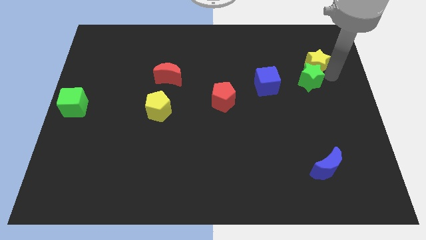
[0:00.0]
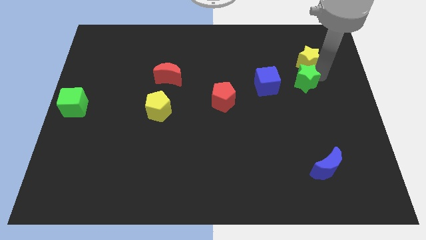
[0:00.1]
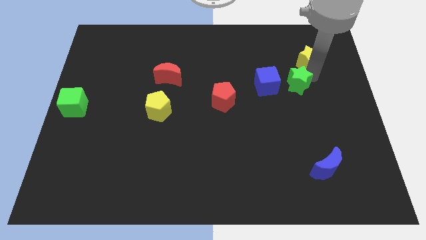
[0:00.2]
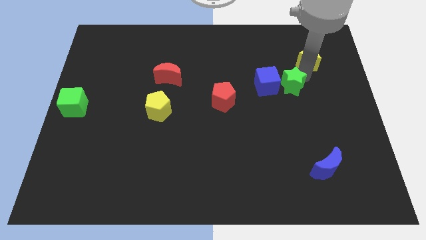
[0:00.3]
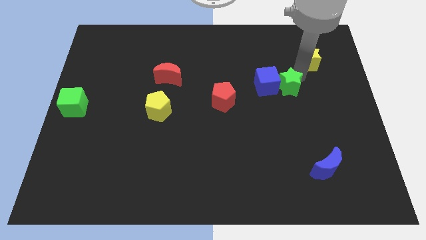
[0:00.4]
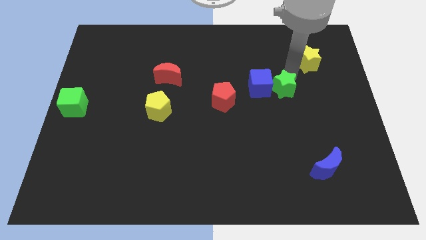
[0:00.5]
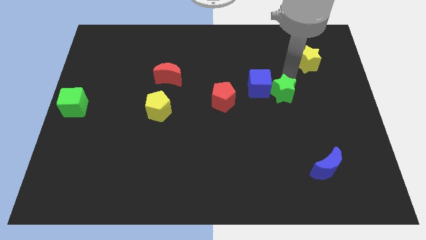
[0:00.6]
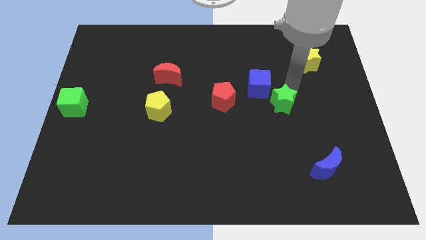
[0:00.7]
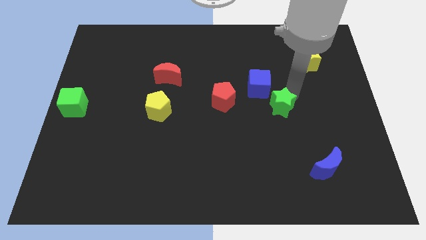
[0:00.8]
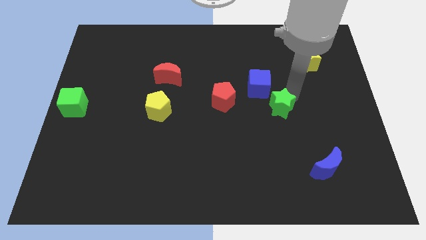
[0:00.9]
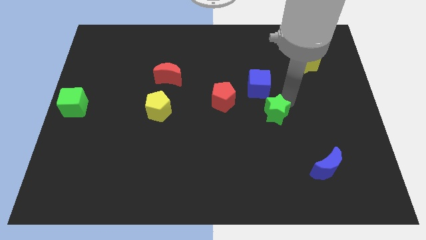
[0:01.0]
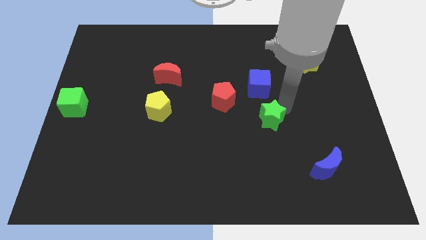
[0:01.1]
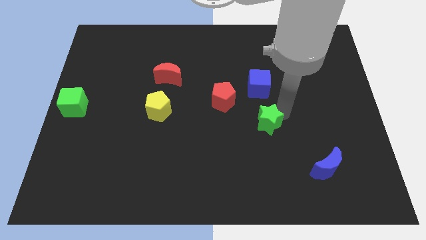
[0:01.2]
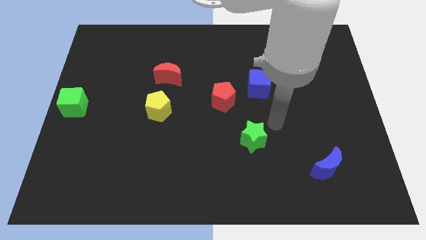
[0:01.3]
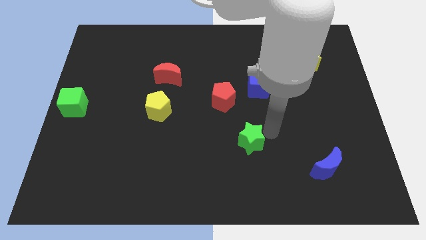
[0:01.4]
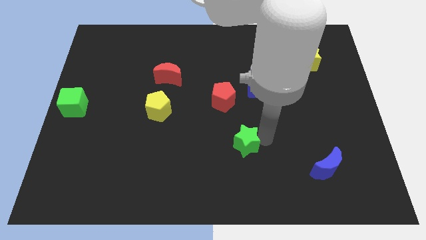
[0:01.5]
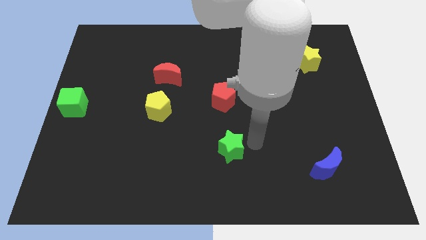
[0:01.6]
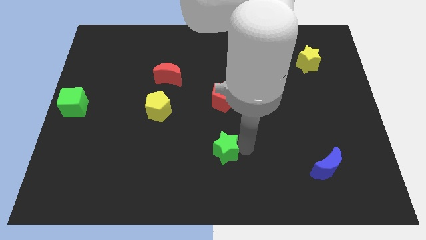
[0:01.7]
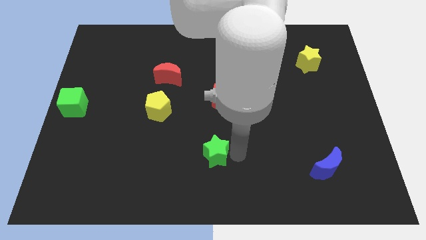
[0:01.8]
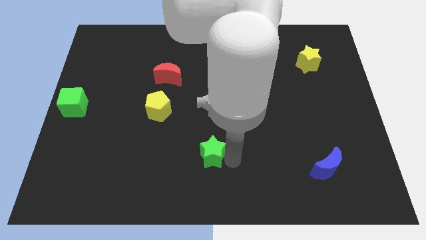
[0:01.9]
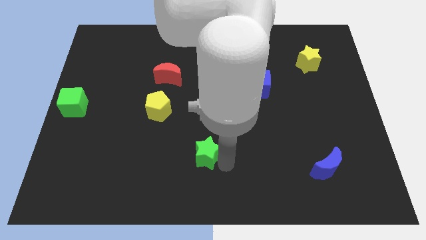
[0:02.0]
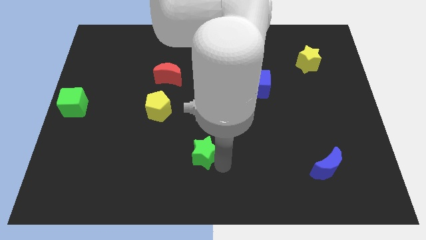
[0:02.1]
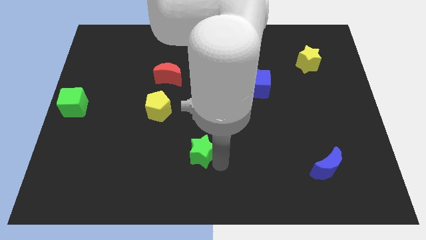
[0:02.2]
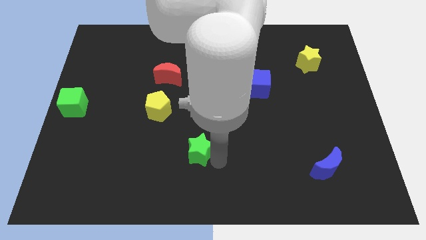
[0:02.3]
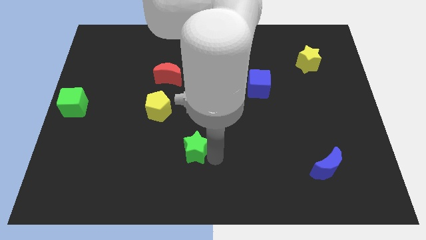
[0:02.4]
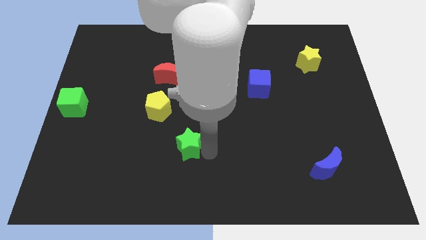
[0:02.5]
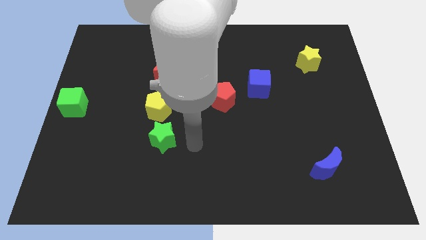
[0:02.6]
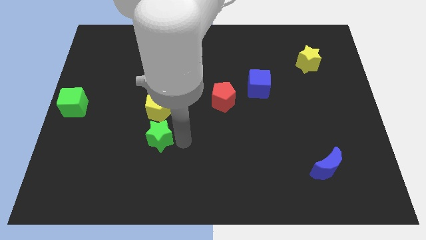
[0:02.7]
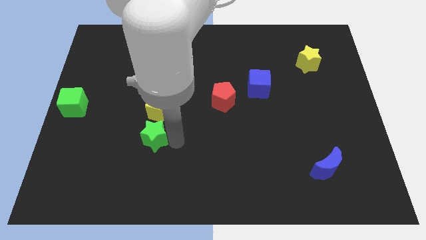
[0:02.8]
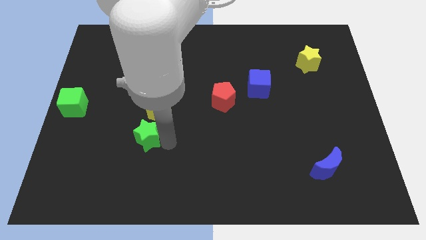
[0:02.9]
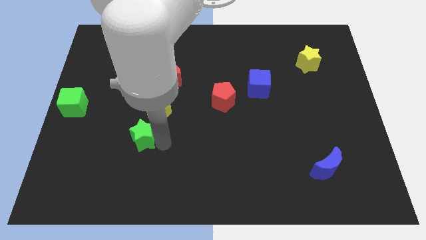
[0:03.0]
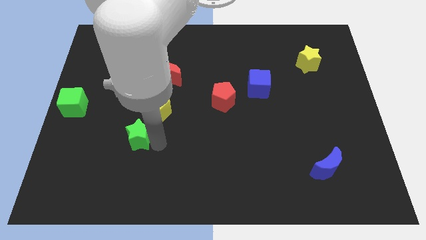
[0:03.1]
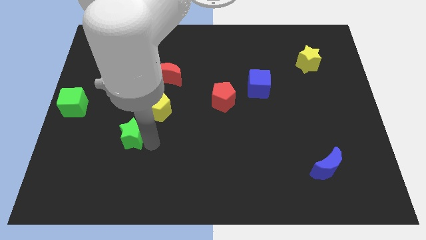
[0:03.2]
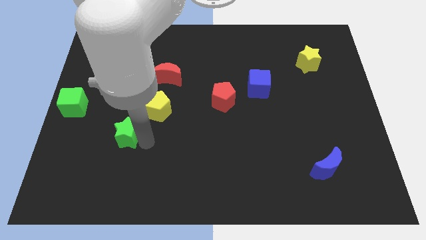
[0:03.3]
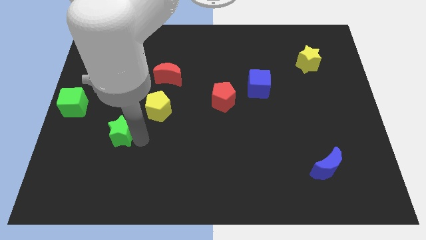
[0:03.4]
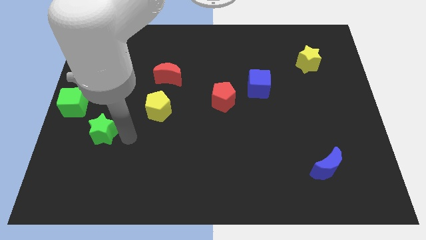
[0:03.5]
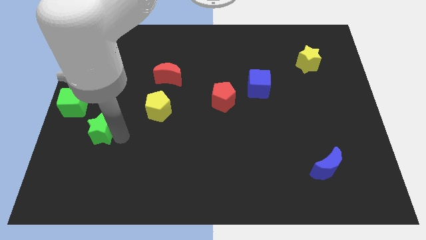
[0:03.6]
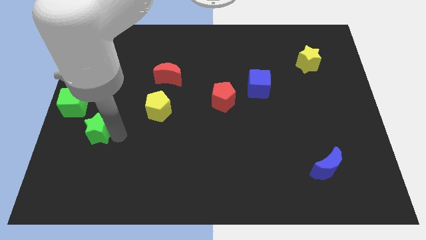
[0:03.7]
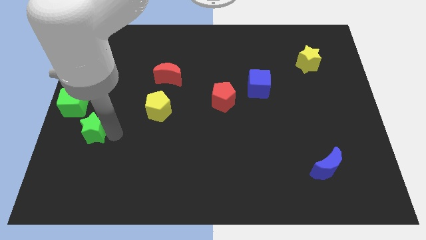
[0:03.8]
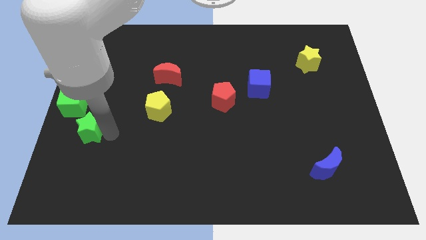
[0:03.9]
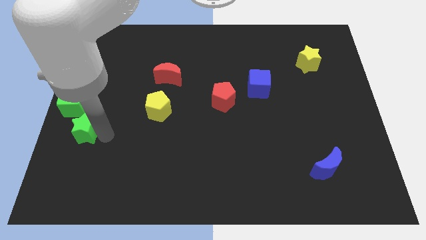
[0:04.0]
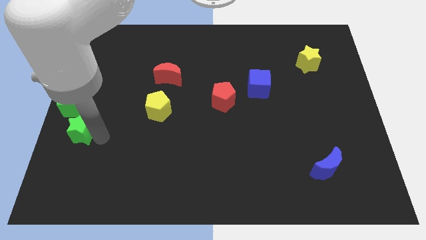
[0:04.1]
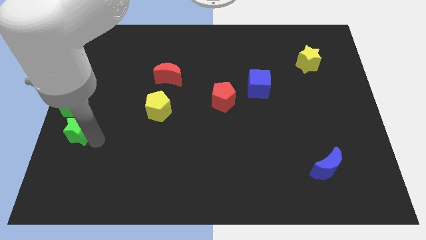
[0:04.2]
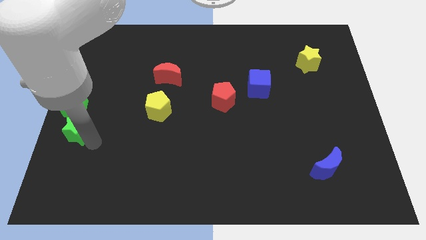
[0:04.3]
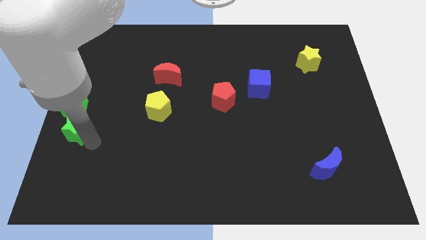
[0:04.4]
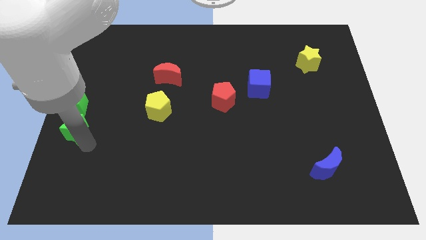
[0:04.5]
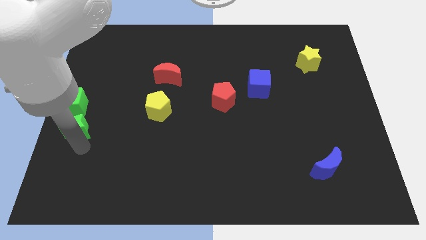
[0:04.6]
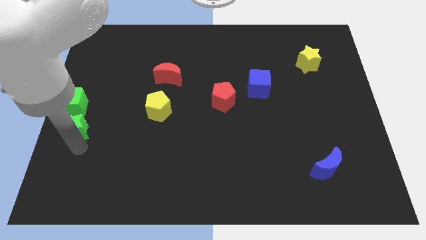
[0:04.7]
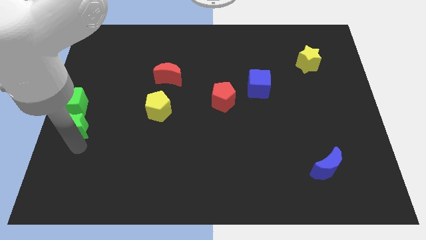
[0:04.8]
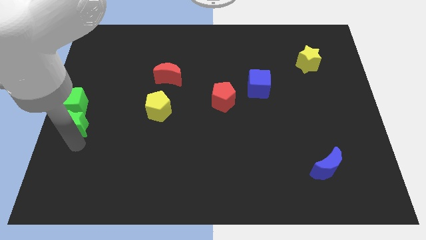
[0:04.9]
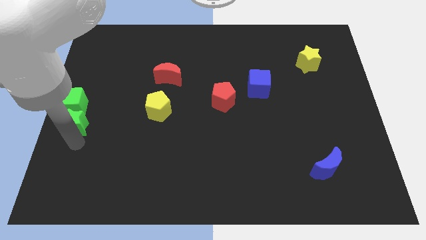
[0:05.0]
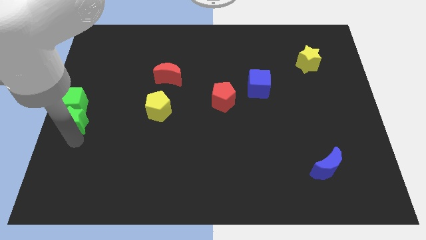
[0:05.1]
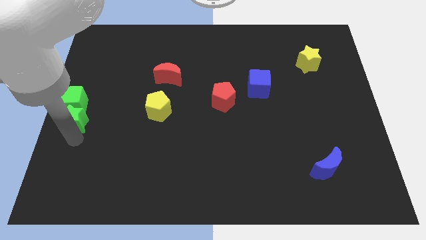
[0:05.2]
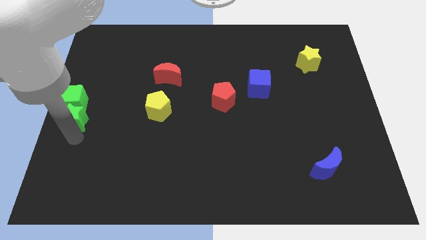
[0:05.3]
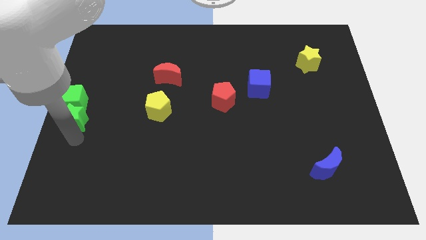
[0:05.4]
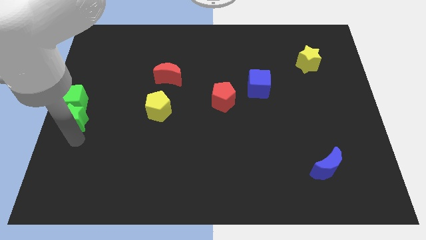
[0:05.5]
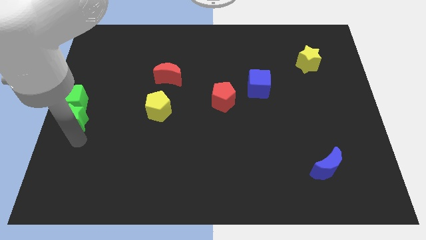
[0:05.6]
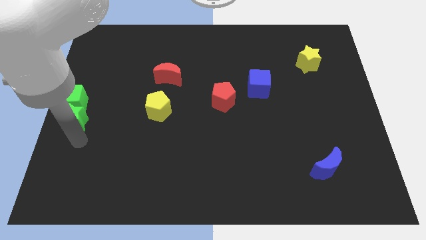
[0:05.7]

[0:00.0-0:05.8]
place green star below the green cube

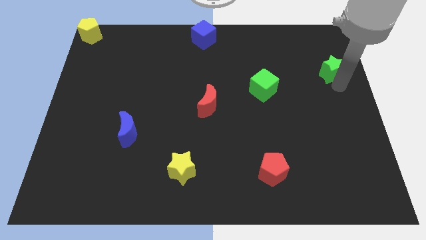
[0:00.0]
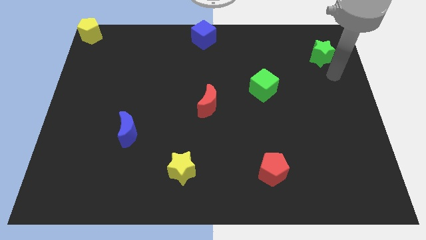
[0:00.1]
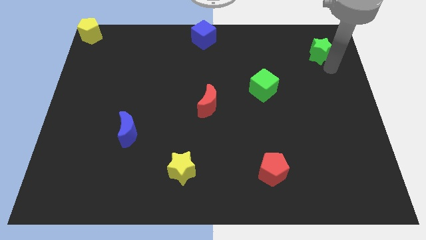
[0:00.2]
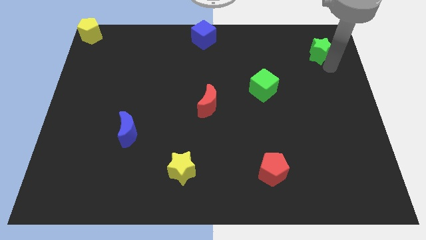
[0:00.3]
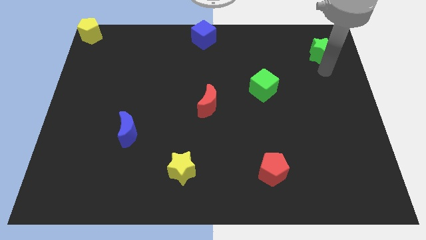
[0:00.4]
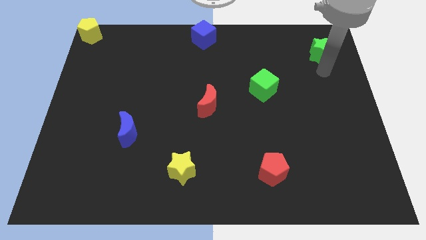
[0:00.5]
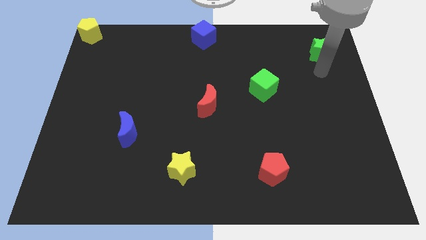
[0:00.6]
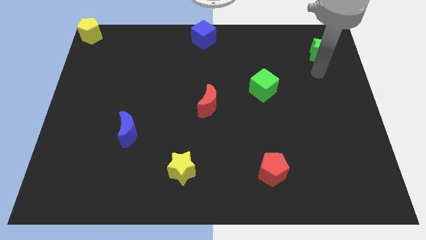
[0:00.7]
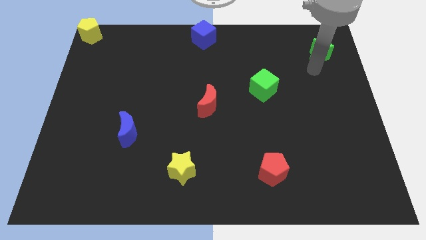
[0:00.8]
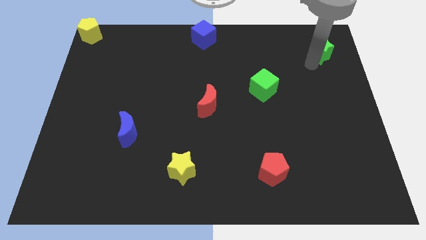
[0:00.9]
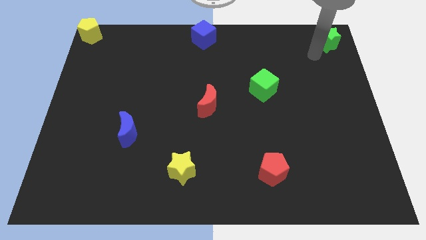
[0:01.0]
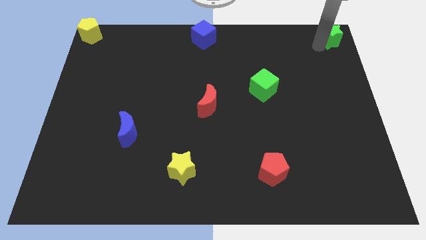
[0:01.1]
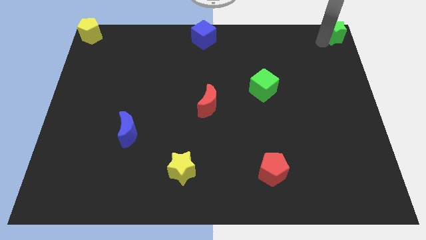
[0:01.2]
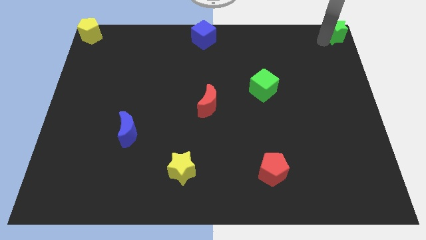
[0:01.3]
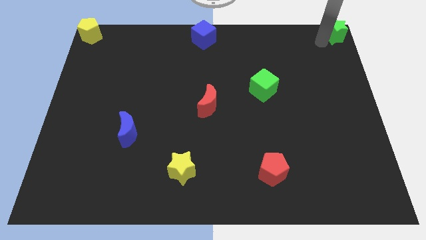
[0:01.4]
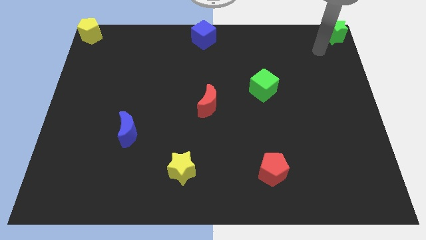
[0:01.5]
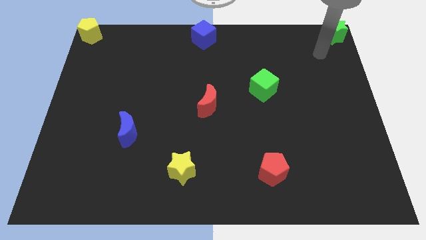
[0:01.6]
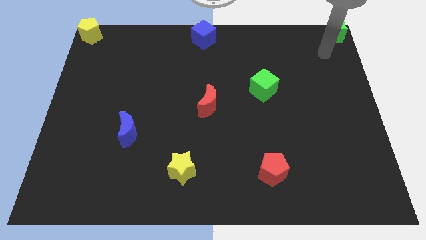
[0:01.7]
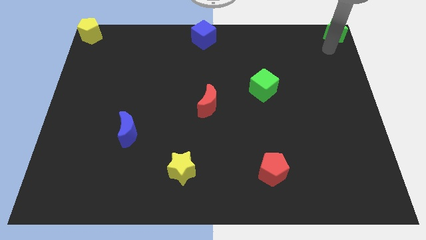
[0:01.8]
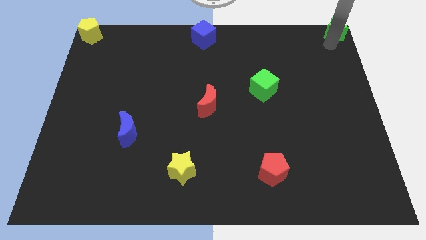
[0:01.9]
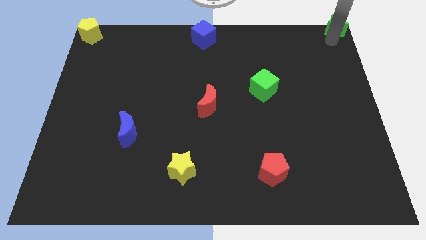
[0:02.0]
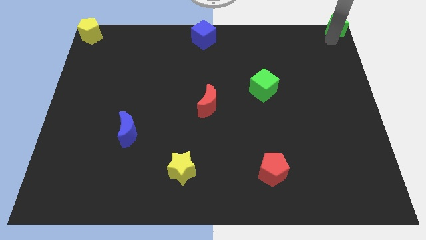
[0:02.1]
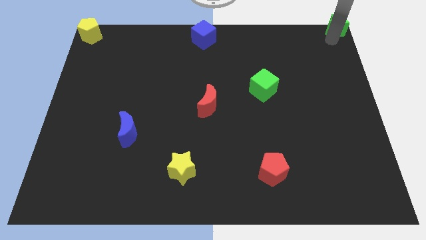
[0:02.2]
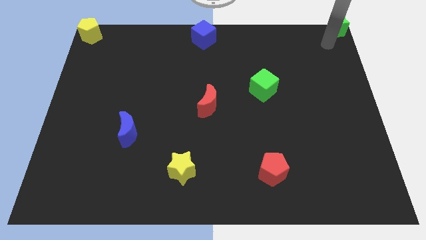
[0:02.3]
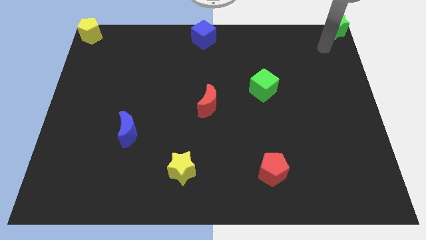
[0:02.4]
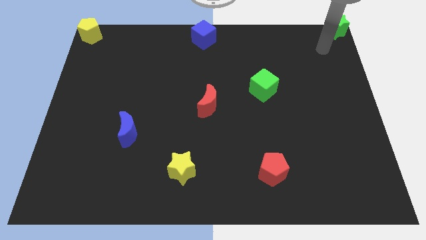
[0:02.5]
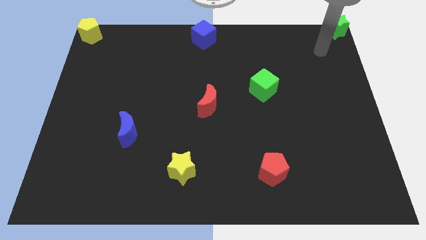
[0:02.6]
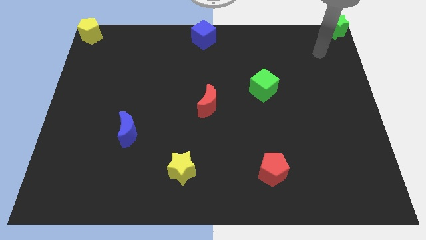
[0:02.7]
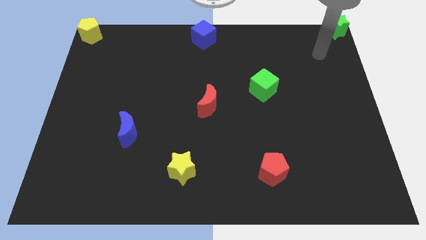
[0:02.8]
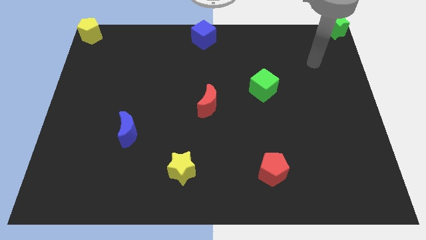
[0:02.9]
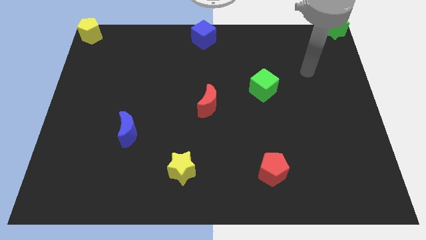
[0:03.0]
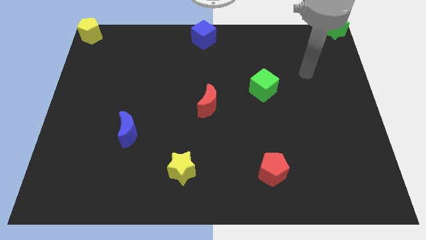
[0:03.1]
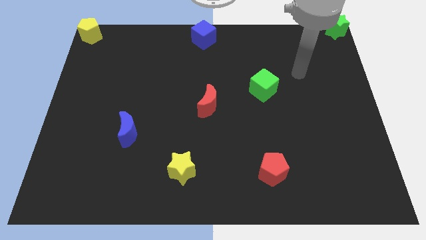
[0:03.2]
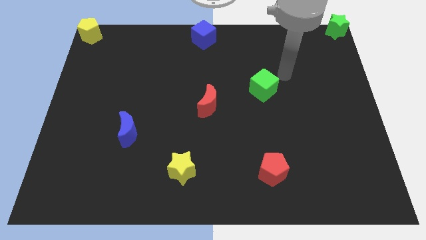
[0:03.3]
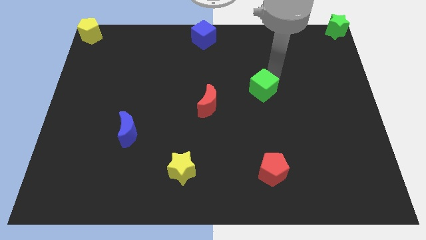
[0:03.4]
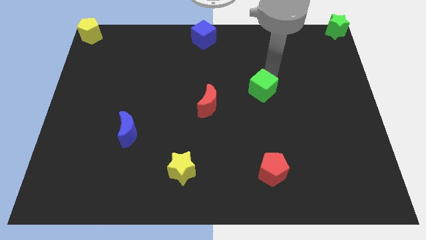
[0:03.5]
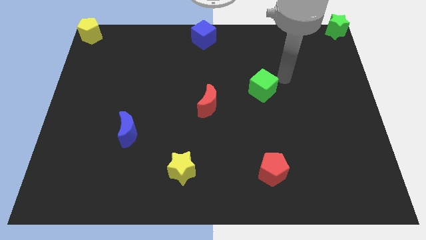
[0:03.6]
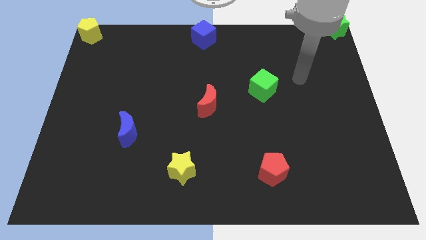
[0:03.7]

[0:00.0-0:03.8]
put the green star at the top right corner
